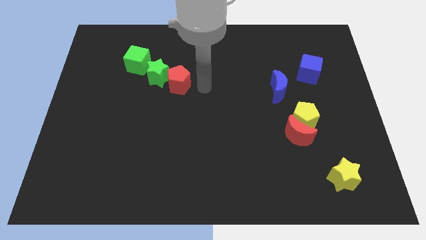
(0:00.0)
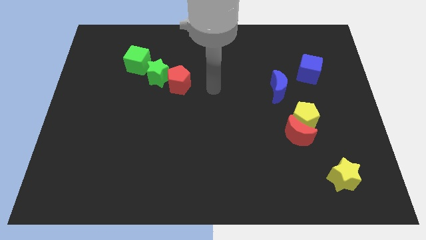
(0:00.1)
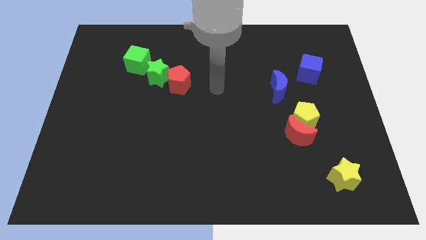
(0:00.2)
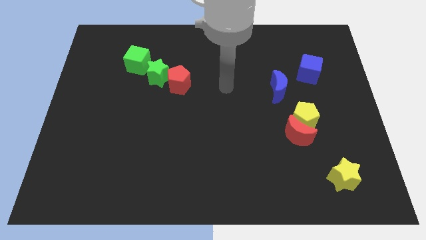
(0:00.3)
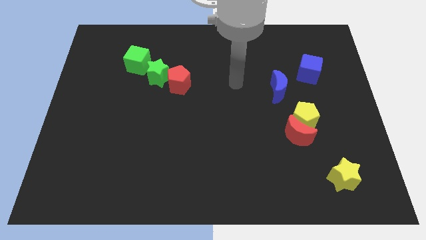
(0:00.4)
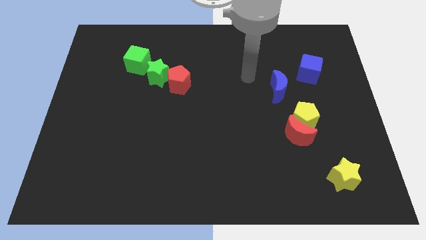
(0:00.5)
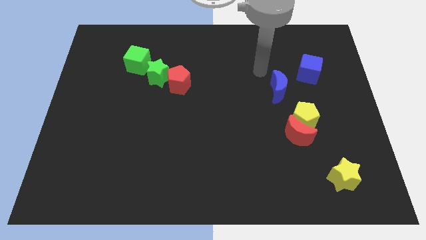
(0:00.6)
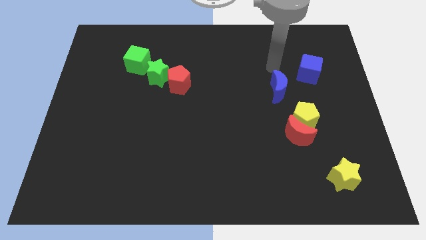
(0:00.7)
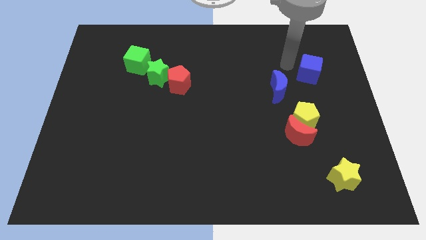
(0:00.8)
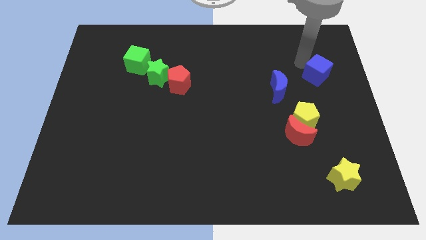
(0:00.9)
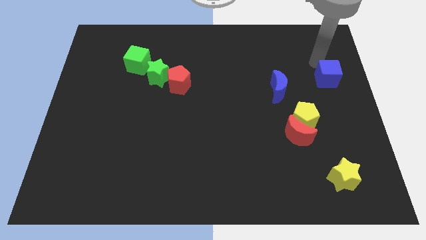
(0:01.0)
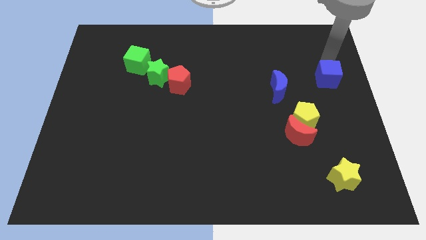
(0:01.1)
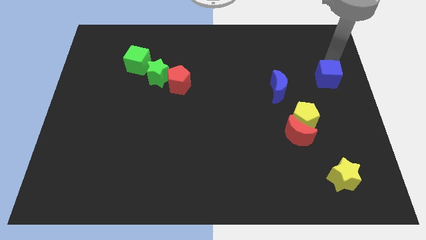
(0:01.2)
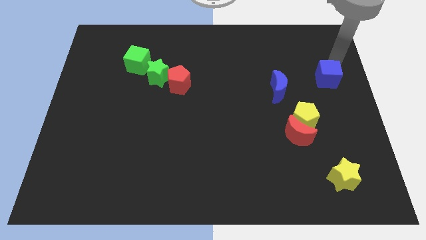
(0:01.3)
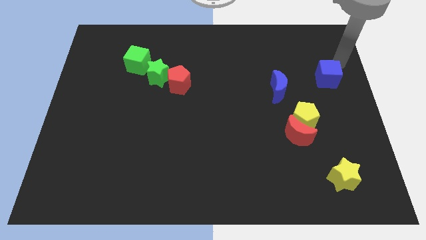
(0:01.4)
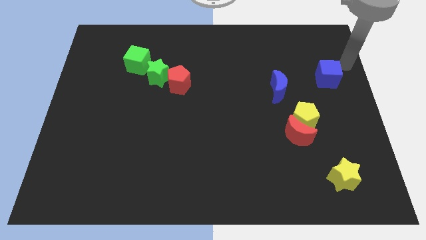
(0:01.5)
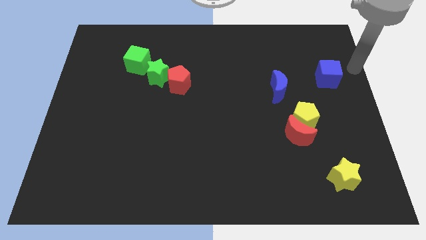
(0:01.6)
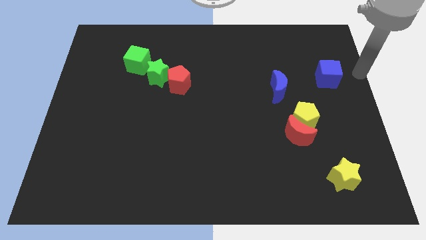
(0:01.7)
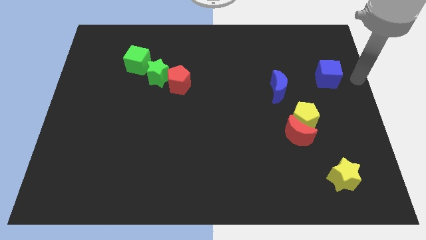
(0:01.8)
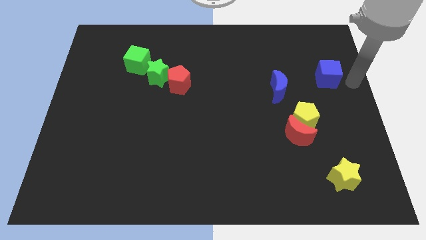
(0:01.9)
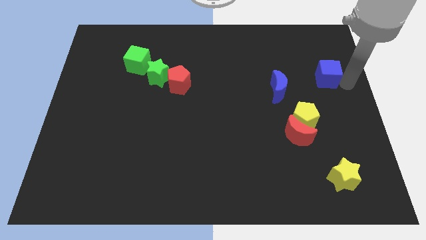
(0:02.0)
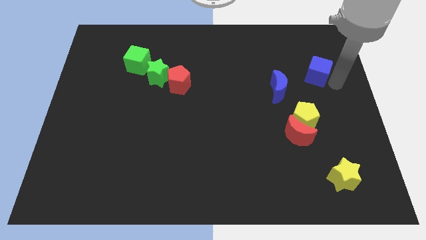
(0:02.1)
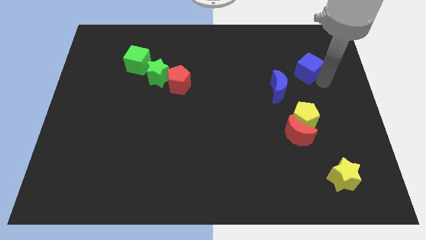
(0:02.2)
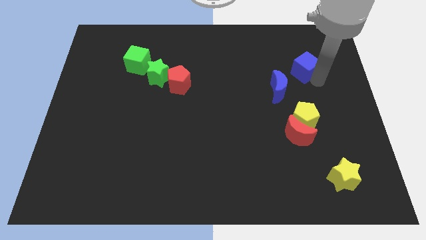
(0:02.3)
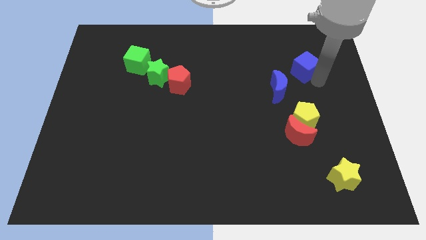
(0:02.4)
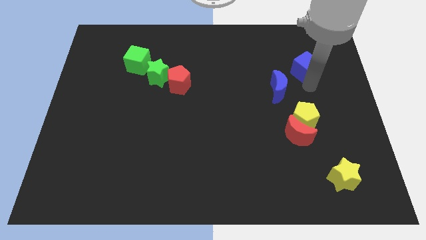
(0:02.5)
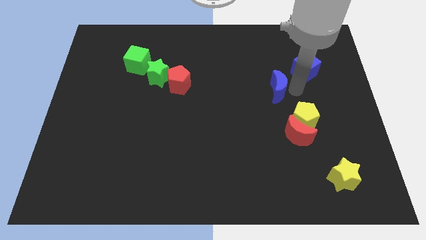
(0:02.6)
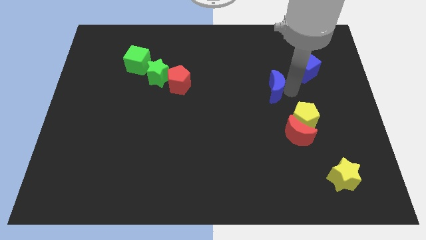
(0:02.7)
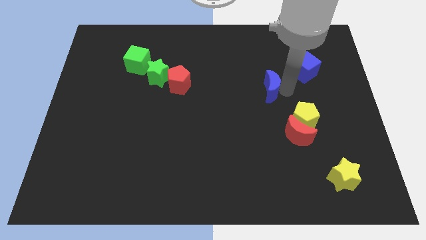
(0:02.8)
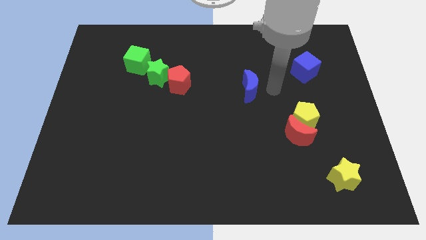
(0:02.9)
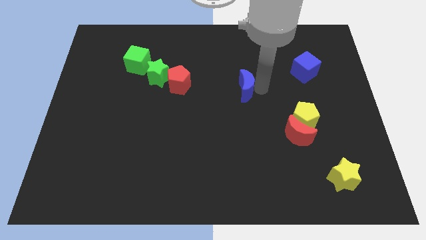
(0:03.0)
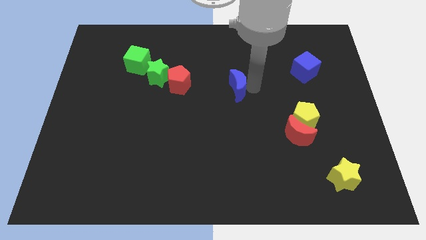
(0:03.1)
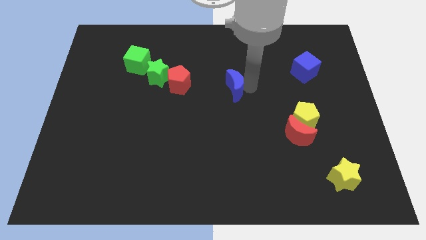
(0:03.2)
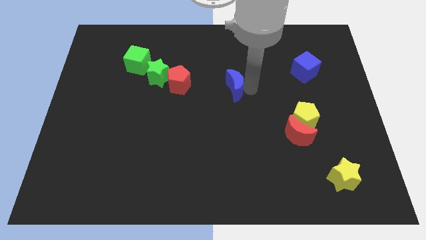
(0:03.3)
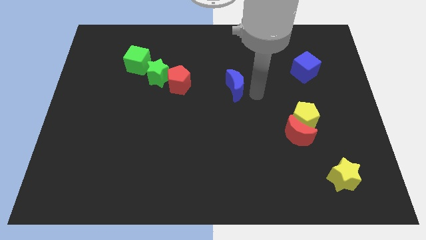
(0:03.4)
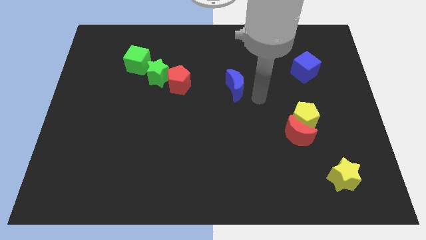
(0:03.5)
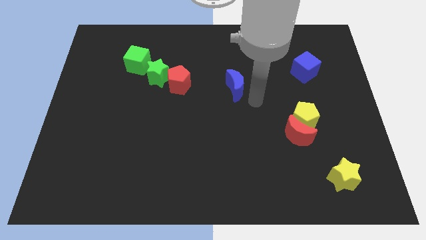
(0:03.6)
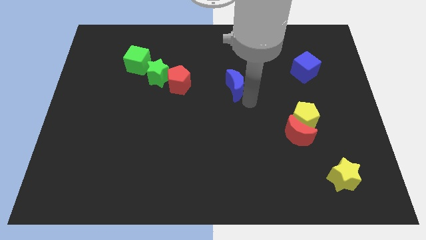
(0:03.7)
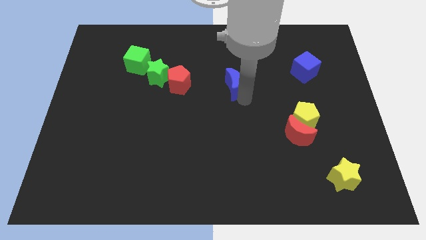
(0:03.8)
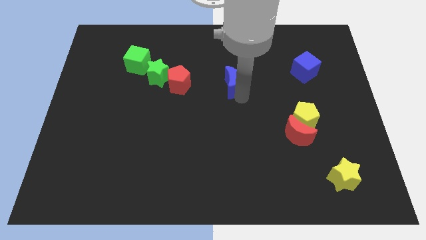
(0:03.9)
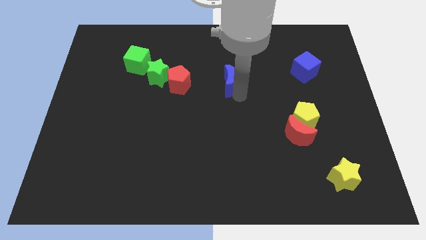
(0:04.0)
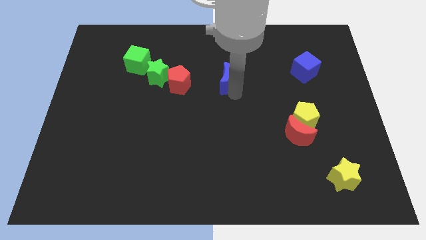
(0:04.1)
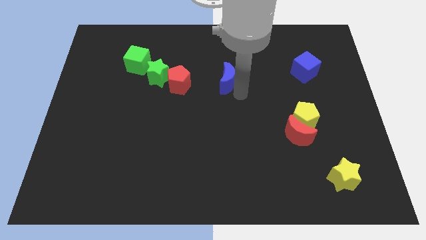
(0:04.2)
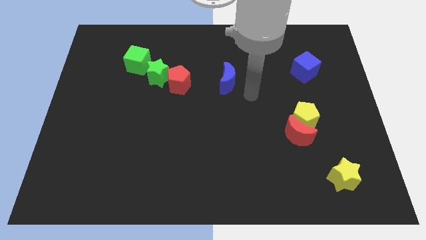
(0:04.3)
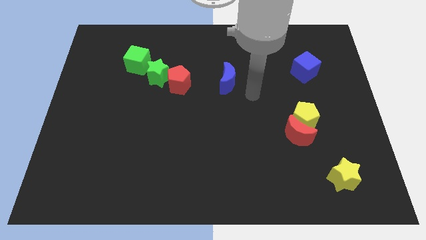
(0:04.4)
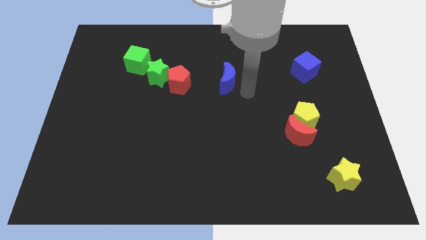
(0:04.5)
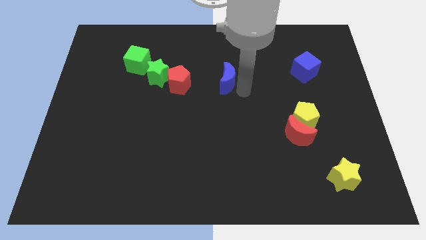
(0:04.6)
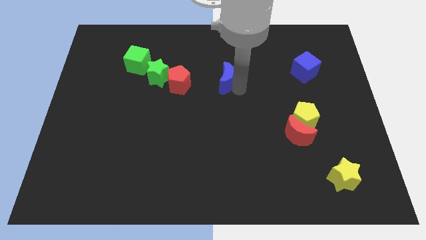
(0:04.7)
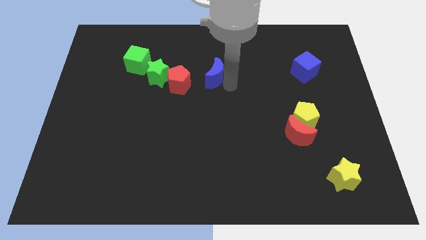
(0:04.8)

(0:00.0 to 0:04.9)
move blue crescent to the center

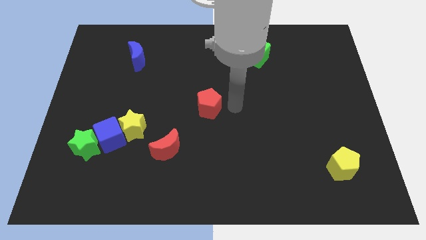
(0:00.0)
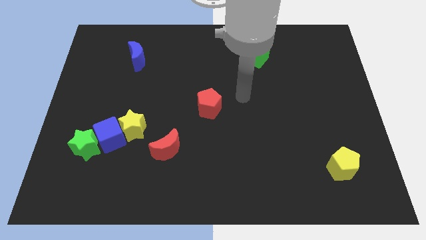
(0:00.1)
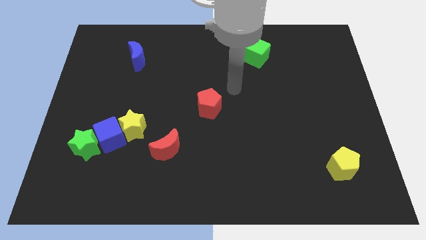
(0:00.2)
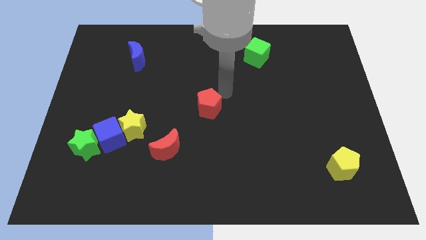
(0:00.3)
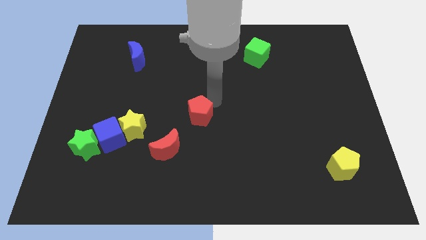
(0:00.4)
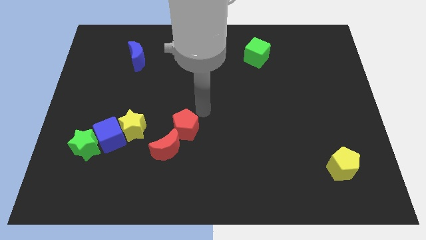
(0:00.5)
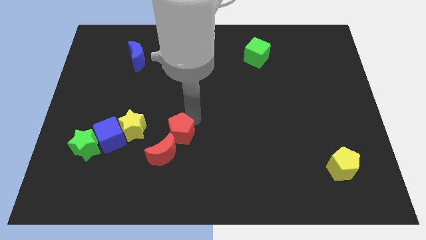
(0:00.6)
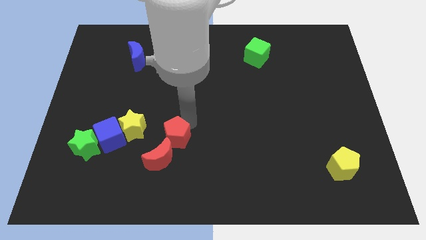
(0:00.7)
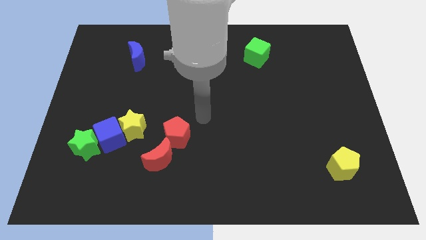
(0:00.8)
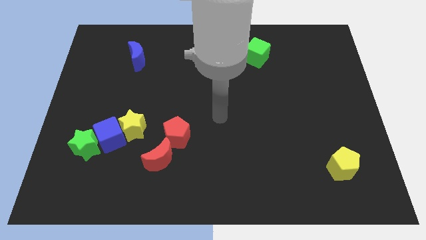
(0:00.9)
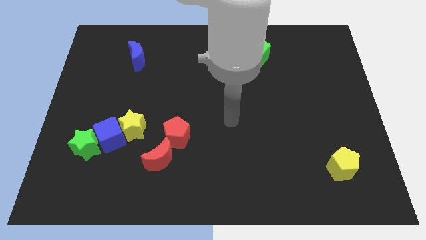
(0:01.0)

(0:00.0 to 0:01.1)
slide the red pentagon into the red crescent

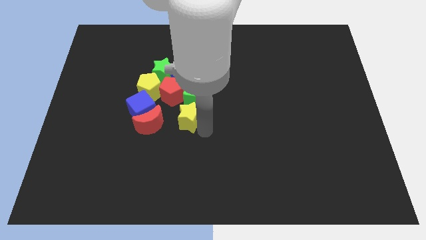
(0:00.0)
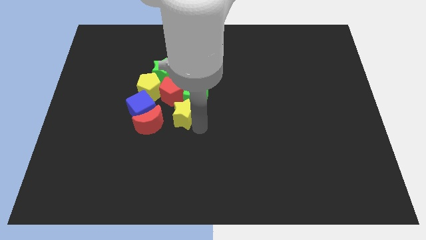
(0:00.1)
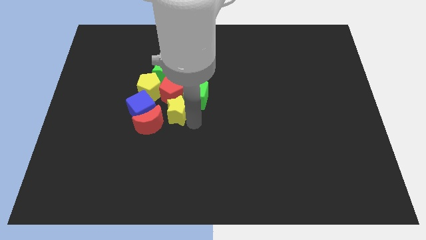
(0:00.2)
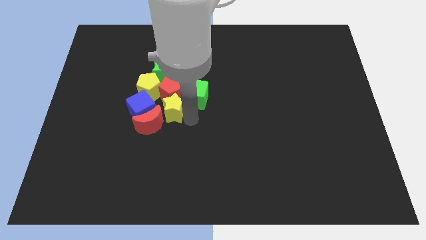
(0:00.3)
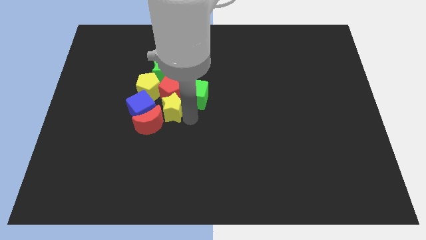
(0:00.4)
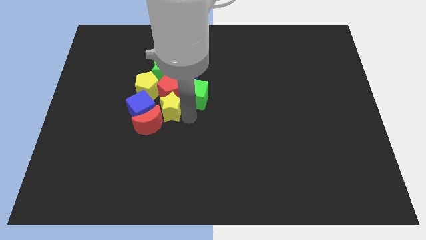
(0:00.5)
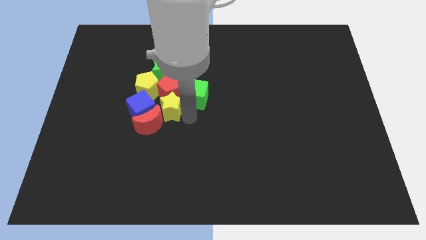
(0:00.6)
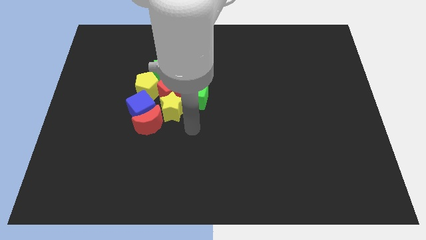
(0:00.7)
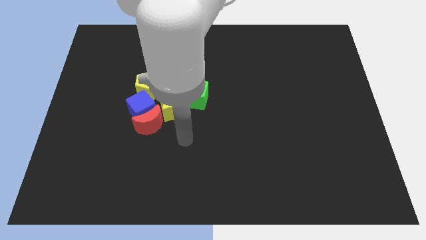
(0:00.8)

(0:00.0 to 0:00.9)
move the yellow star into the red pentagon

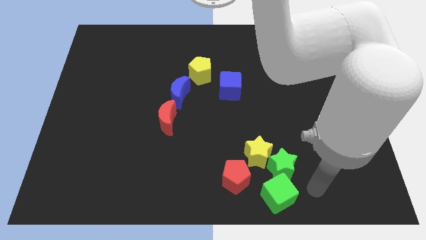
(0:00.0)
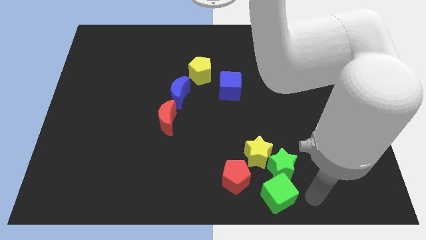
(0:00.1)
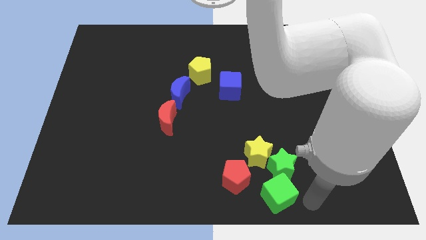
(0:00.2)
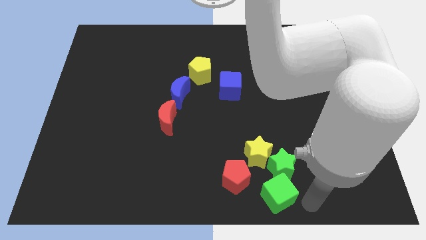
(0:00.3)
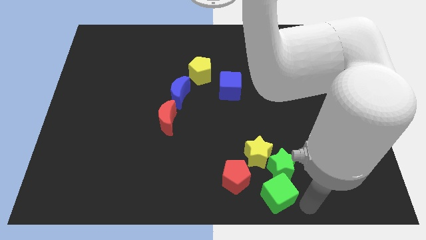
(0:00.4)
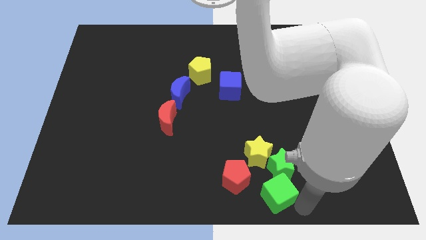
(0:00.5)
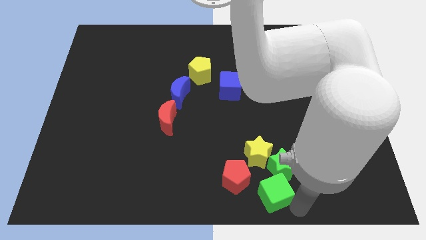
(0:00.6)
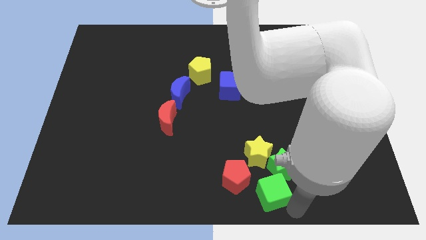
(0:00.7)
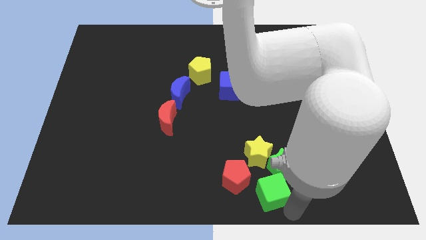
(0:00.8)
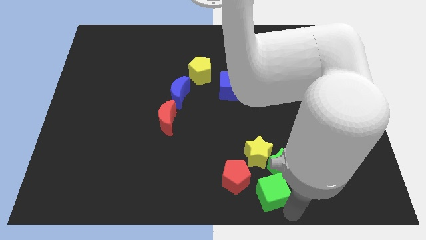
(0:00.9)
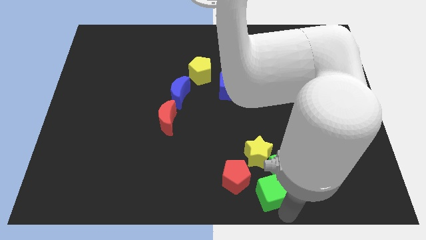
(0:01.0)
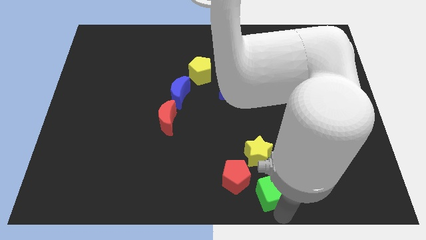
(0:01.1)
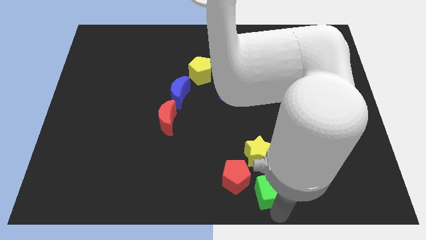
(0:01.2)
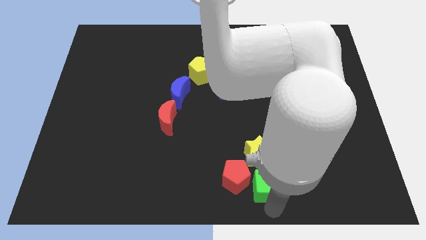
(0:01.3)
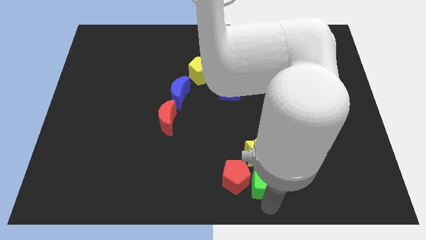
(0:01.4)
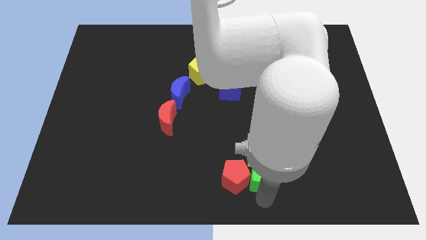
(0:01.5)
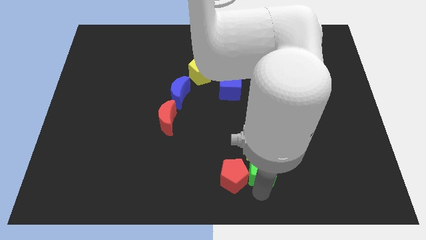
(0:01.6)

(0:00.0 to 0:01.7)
place green cube into yellow and green stars

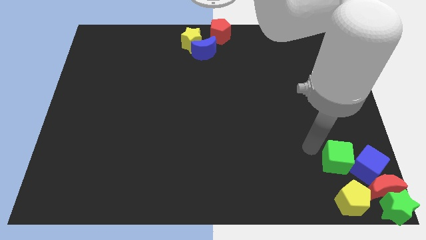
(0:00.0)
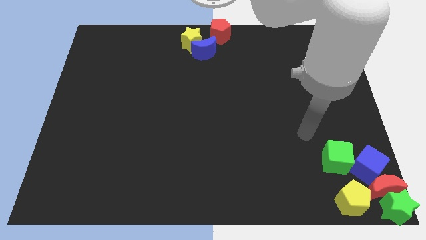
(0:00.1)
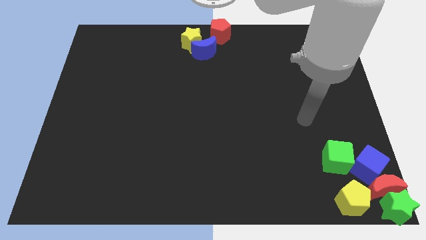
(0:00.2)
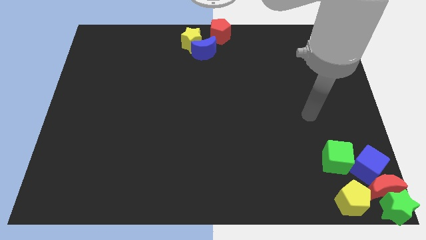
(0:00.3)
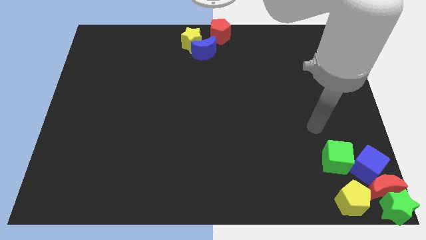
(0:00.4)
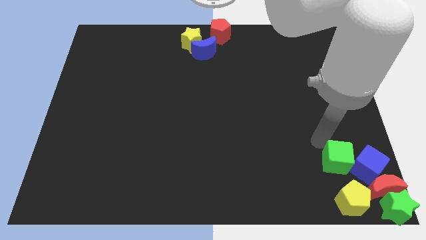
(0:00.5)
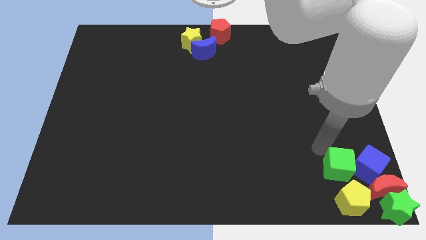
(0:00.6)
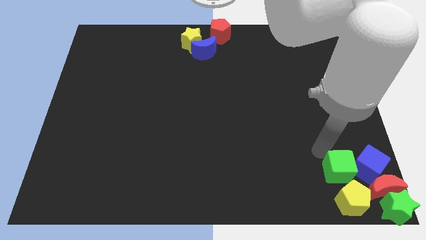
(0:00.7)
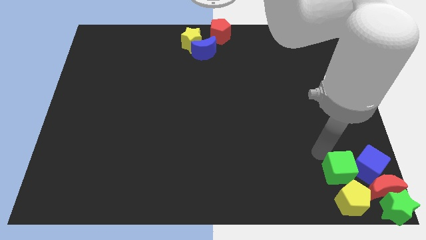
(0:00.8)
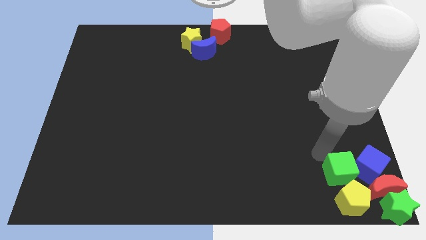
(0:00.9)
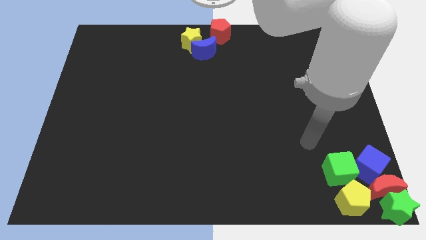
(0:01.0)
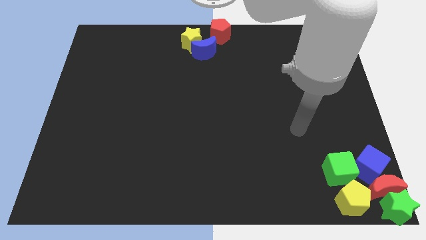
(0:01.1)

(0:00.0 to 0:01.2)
place the green cube above the yellow pentagon
